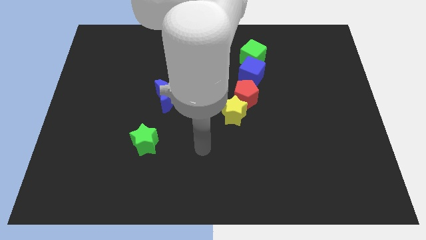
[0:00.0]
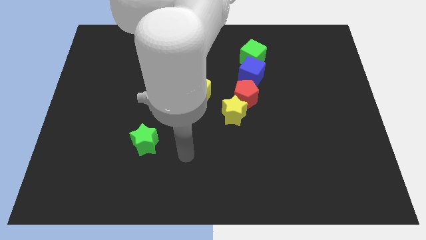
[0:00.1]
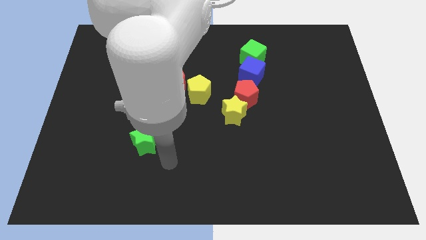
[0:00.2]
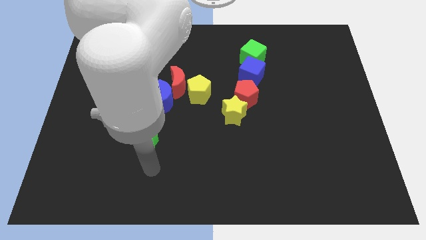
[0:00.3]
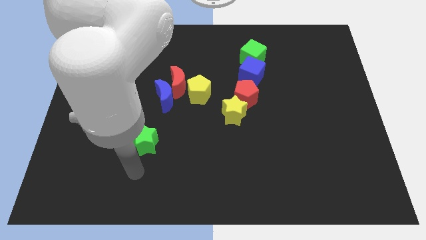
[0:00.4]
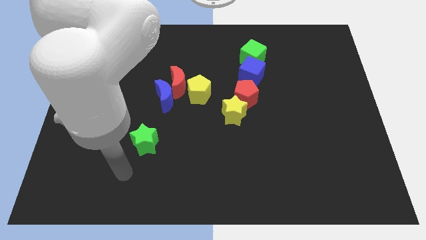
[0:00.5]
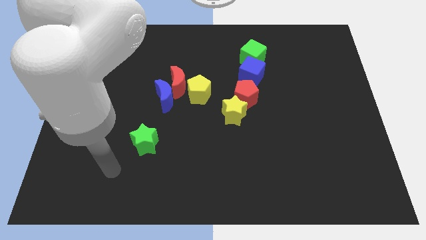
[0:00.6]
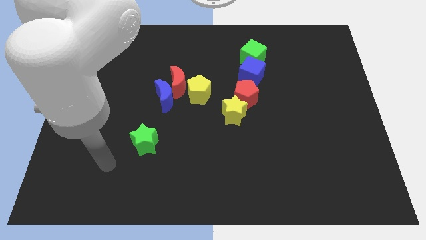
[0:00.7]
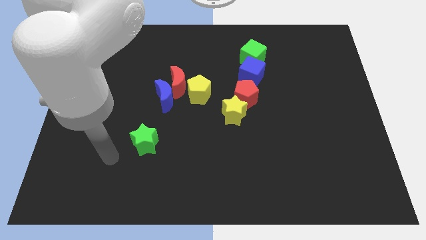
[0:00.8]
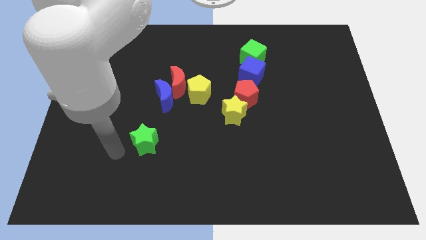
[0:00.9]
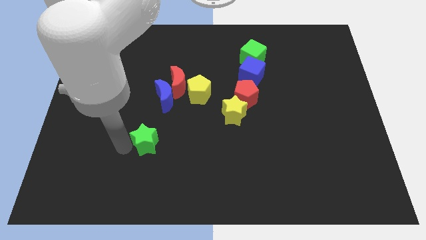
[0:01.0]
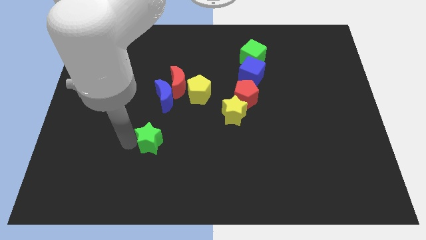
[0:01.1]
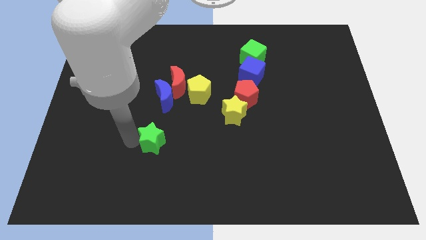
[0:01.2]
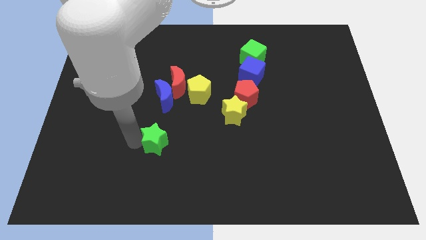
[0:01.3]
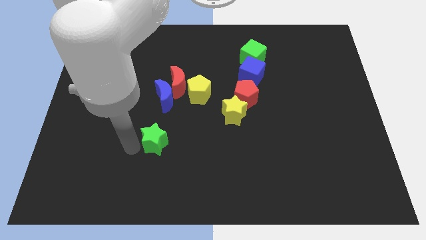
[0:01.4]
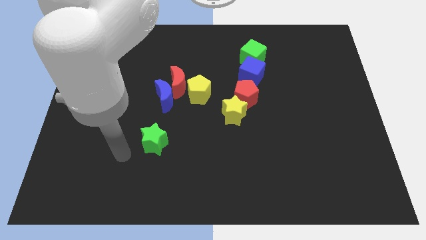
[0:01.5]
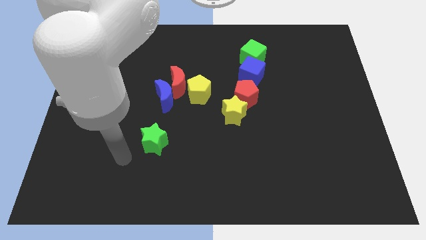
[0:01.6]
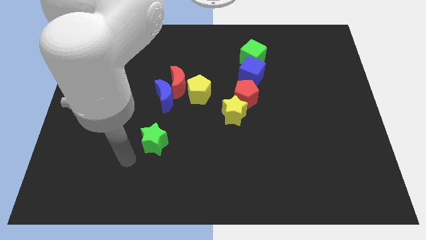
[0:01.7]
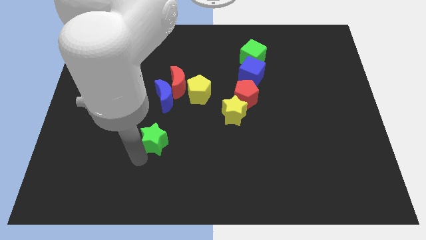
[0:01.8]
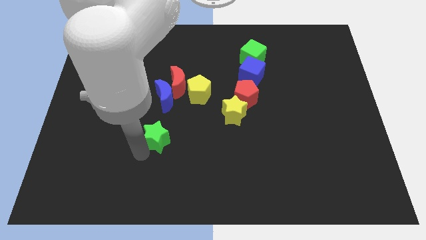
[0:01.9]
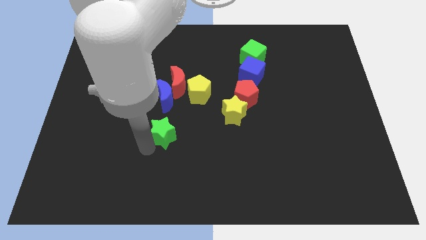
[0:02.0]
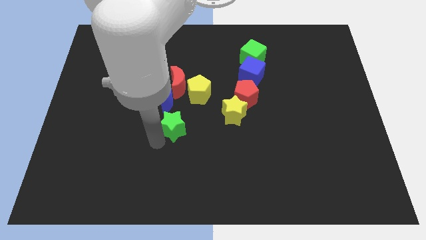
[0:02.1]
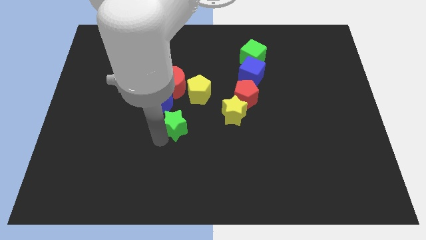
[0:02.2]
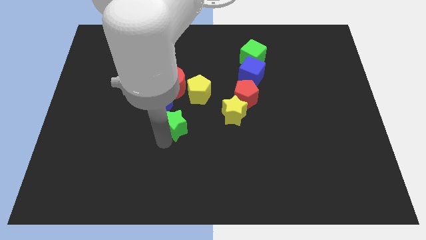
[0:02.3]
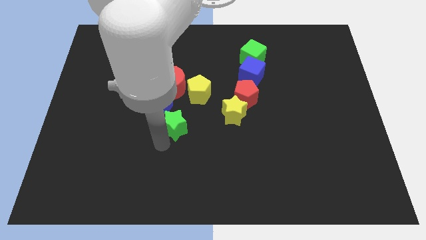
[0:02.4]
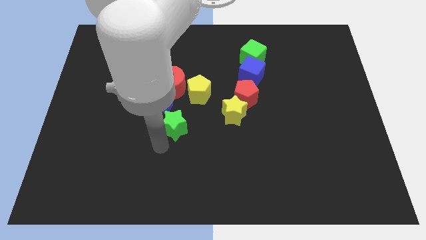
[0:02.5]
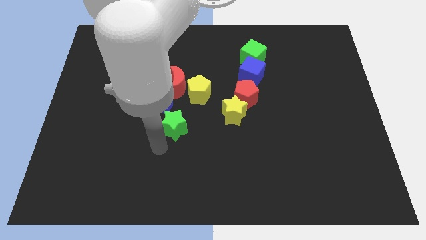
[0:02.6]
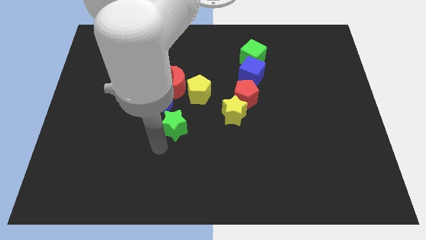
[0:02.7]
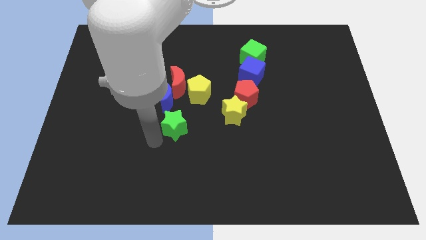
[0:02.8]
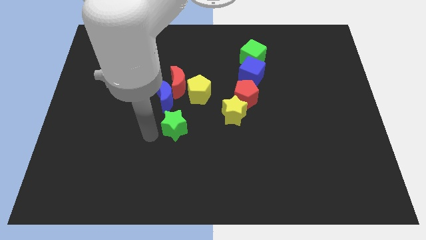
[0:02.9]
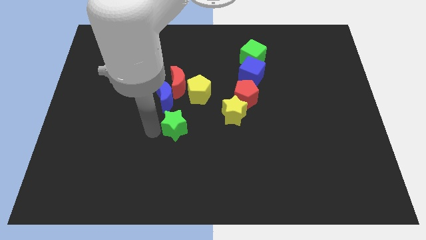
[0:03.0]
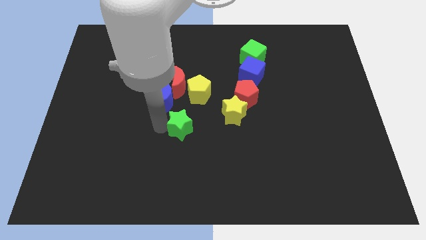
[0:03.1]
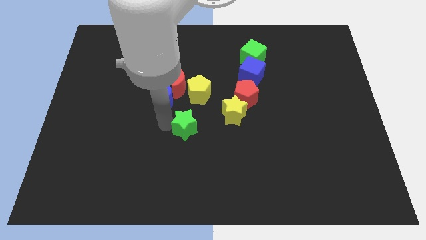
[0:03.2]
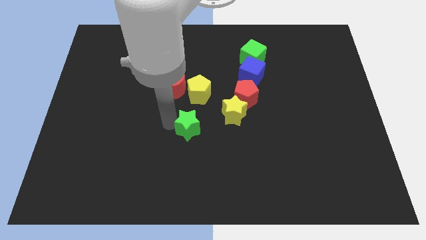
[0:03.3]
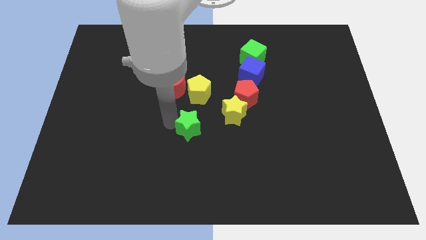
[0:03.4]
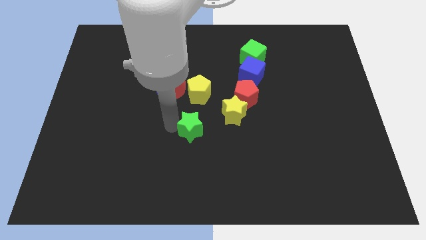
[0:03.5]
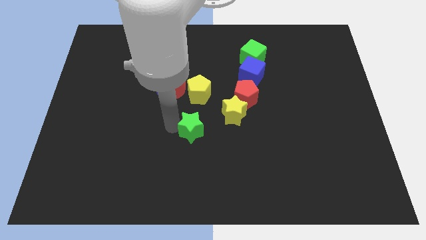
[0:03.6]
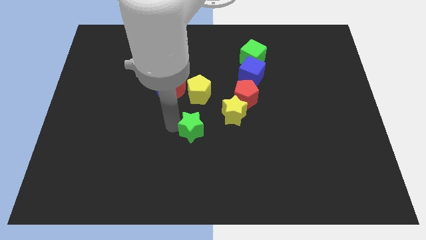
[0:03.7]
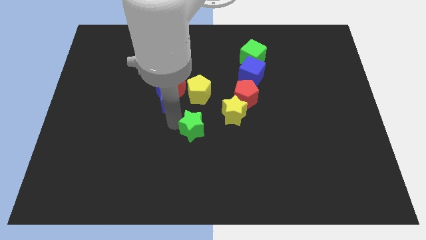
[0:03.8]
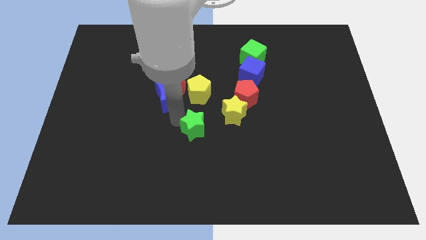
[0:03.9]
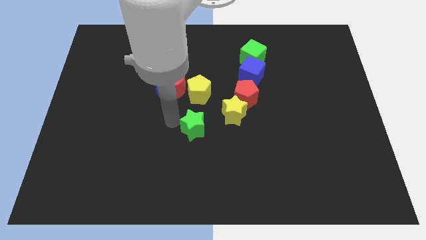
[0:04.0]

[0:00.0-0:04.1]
place the green star vertically below the bottom side of the yellow pentagon

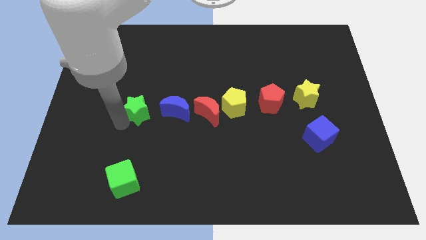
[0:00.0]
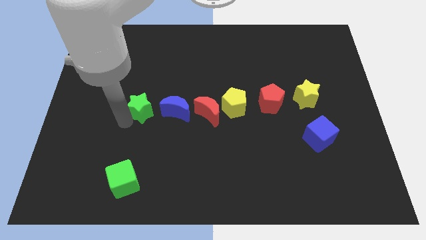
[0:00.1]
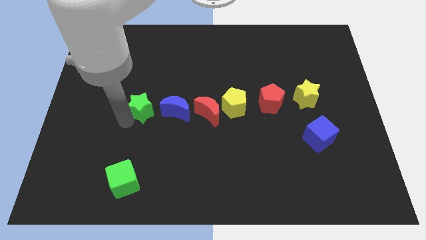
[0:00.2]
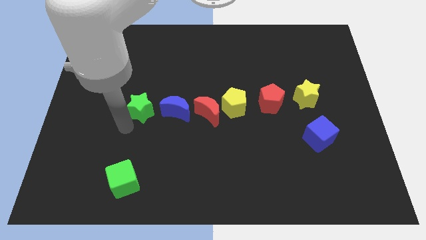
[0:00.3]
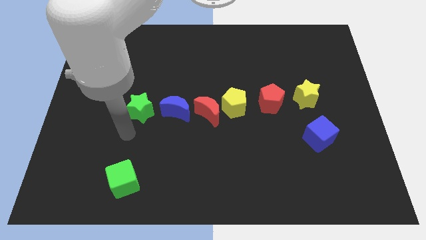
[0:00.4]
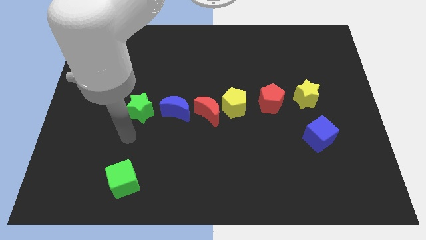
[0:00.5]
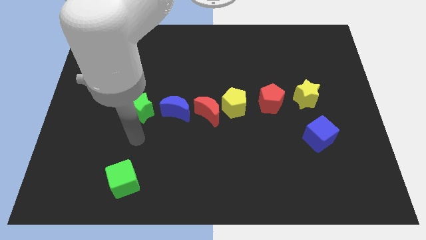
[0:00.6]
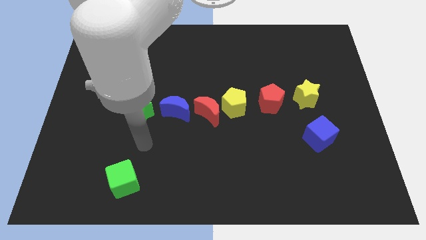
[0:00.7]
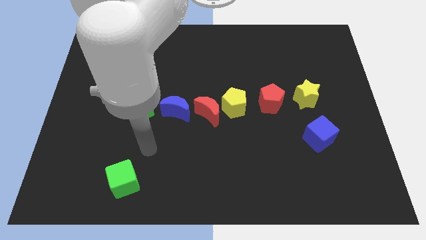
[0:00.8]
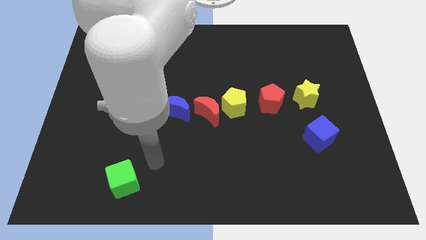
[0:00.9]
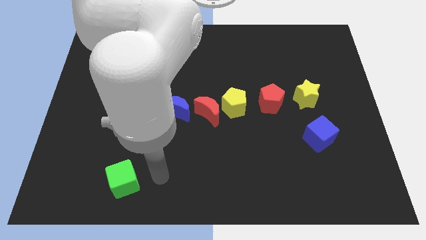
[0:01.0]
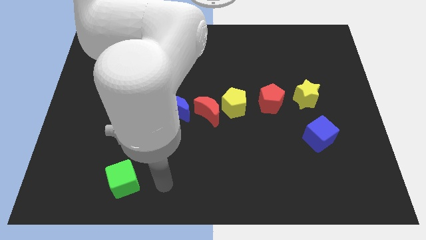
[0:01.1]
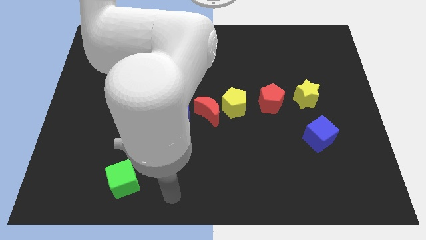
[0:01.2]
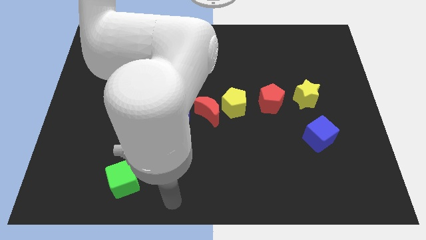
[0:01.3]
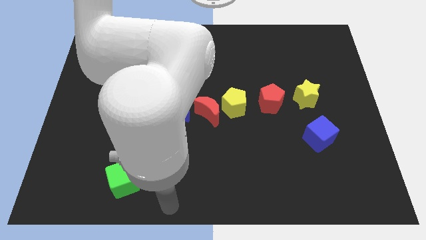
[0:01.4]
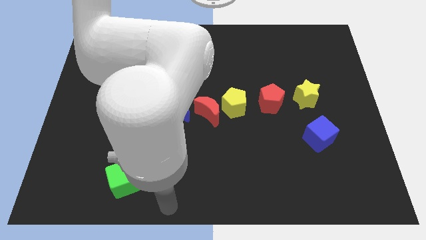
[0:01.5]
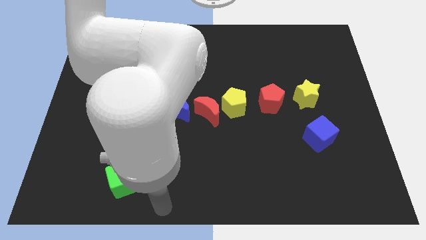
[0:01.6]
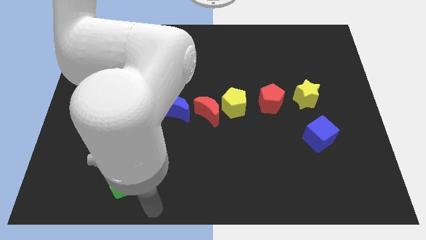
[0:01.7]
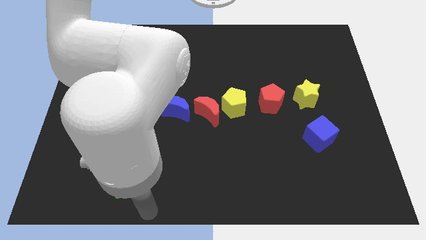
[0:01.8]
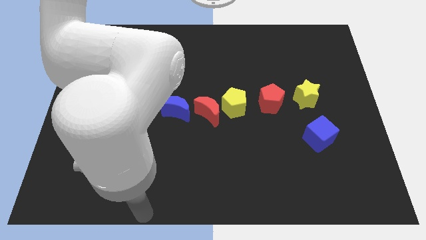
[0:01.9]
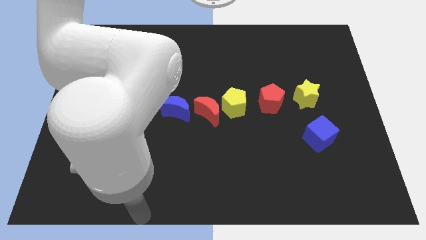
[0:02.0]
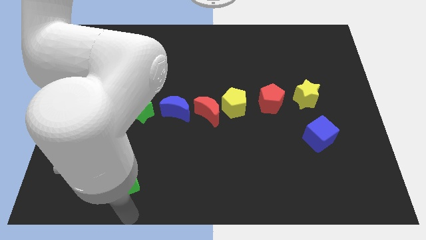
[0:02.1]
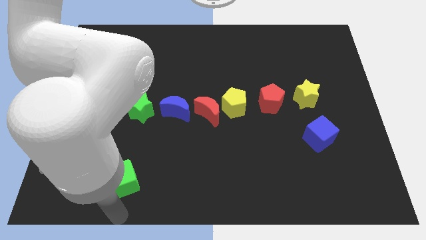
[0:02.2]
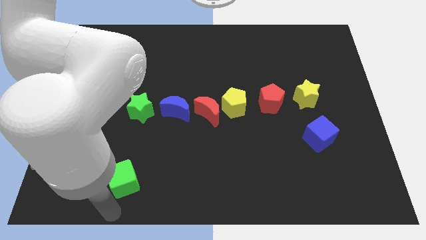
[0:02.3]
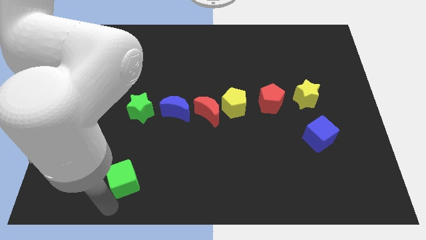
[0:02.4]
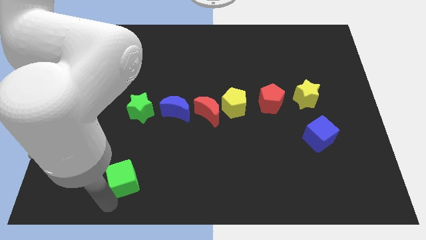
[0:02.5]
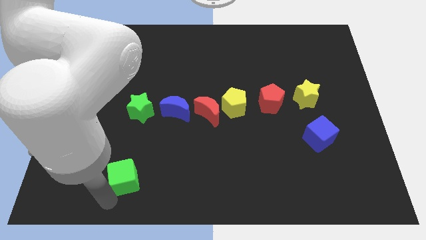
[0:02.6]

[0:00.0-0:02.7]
place the arm near the green cube

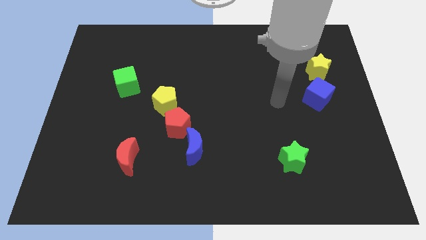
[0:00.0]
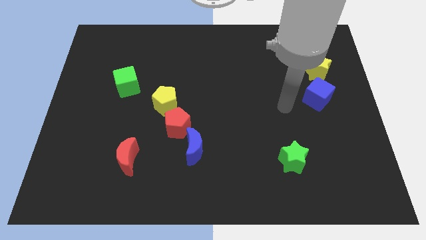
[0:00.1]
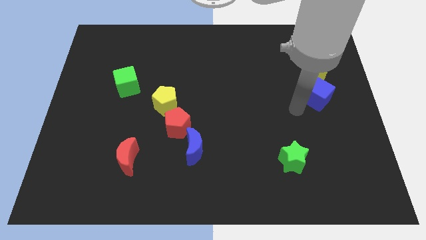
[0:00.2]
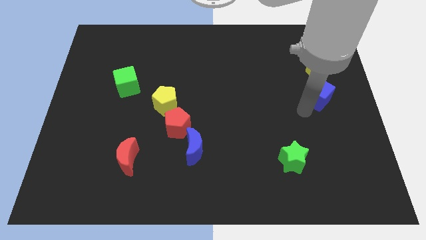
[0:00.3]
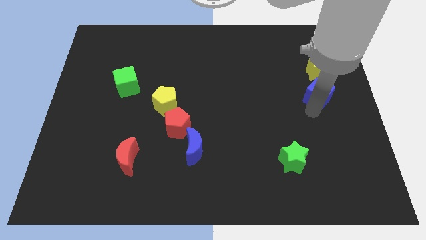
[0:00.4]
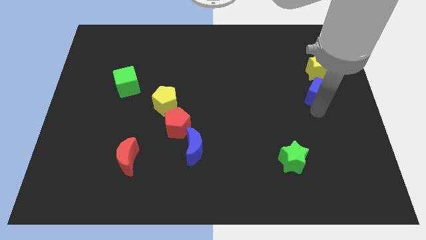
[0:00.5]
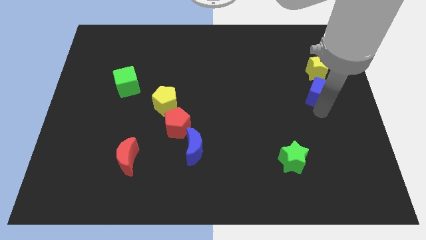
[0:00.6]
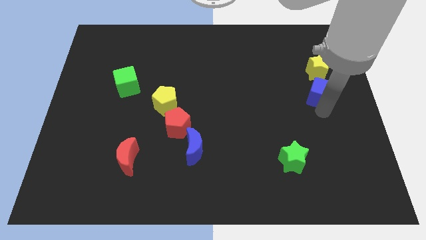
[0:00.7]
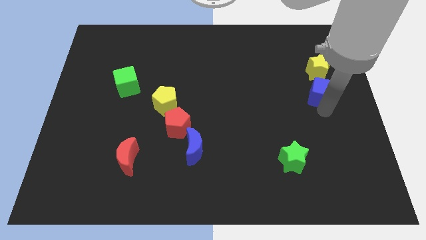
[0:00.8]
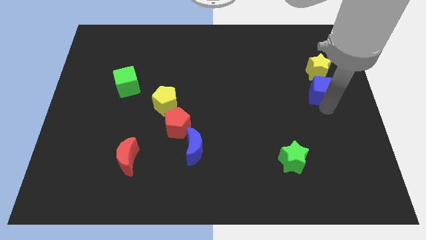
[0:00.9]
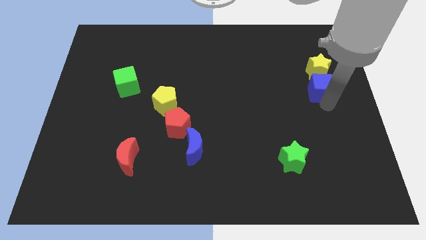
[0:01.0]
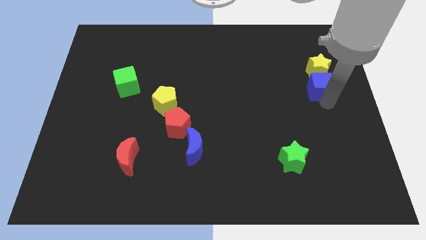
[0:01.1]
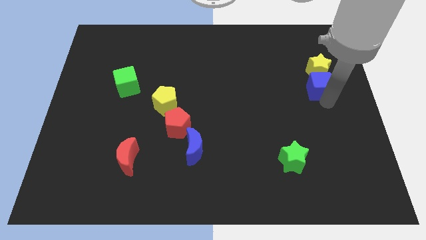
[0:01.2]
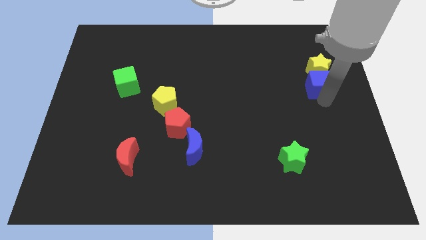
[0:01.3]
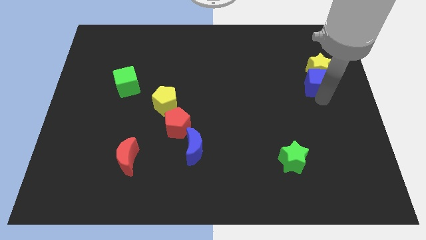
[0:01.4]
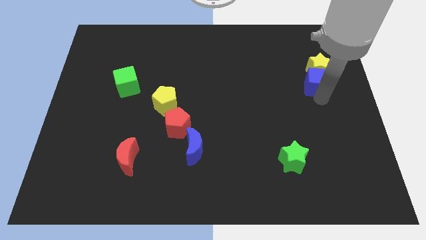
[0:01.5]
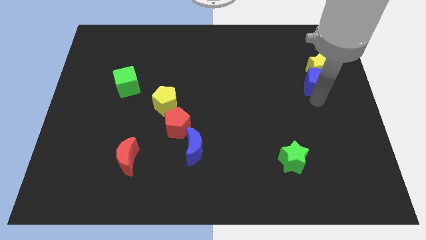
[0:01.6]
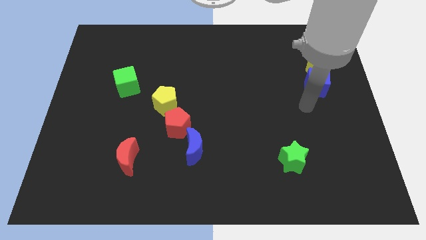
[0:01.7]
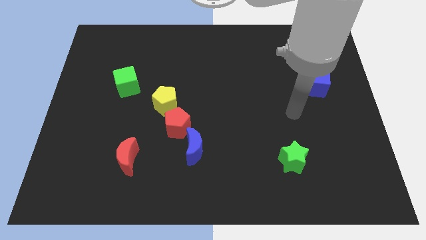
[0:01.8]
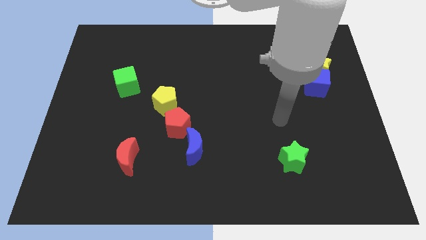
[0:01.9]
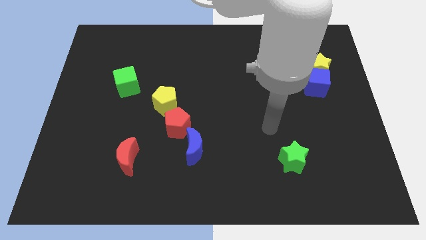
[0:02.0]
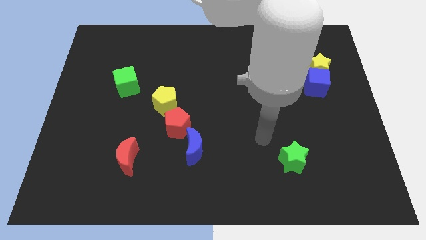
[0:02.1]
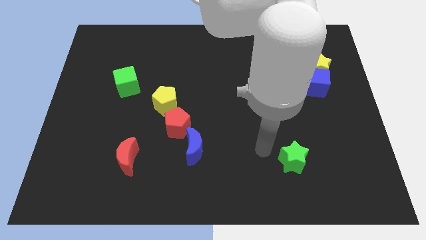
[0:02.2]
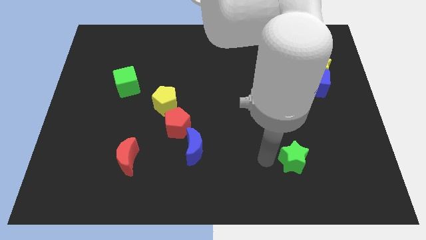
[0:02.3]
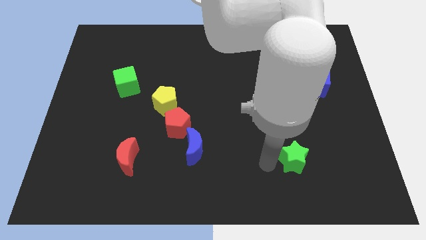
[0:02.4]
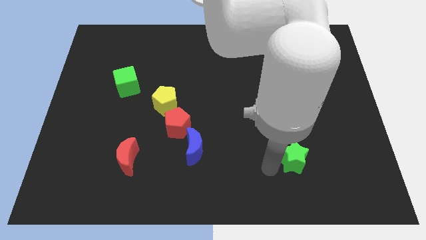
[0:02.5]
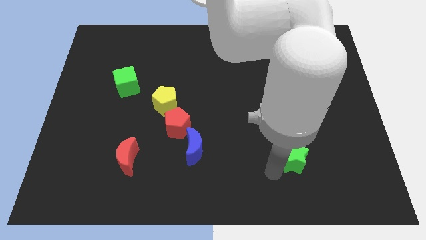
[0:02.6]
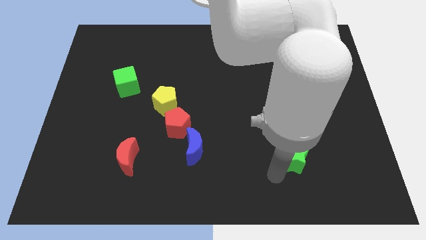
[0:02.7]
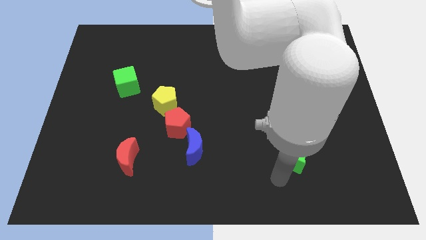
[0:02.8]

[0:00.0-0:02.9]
place the blue cube below the yellow star
